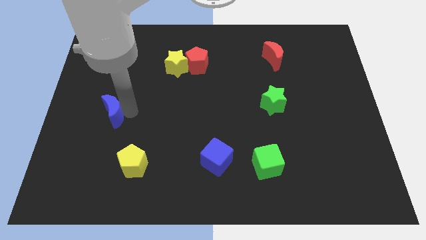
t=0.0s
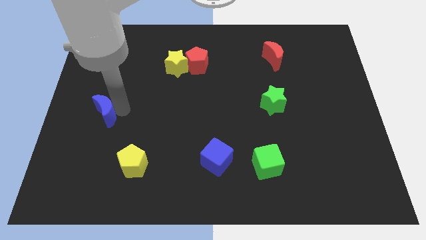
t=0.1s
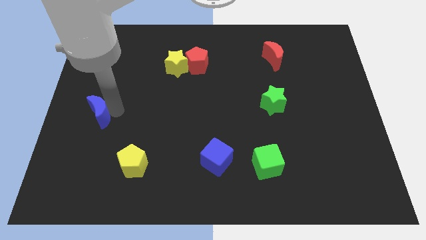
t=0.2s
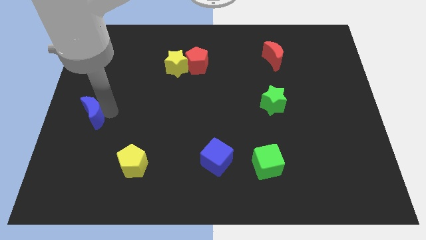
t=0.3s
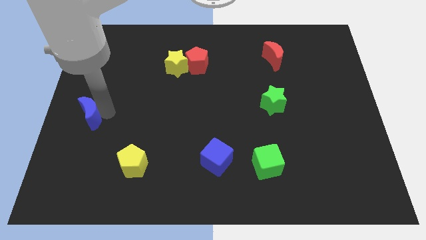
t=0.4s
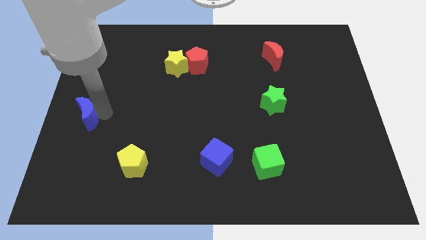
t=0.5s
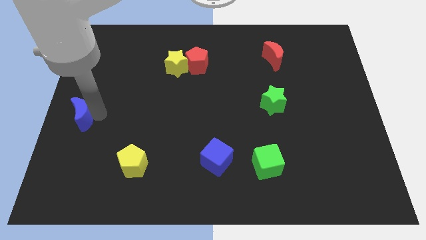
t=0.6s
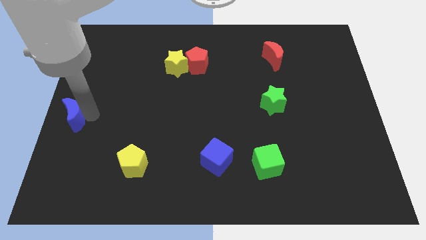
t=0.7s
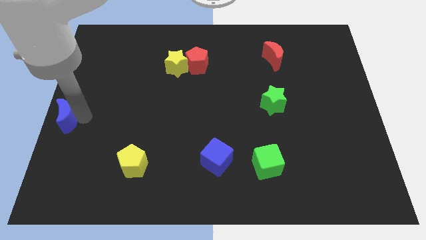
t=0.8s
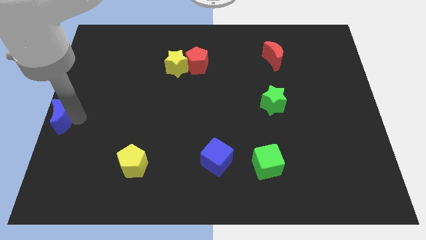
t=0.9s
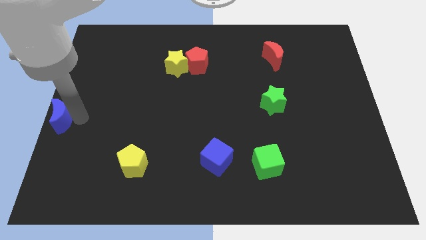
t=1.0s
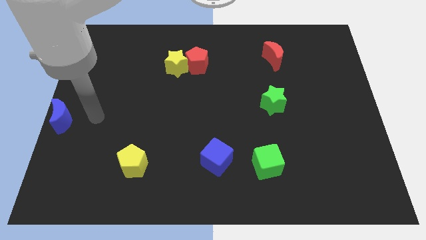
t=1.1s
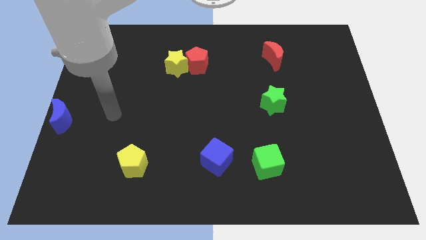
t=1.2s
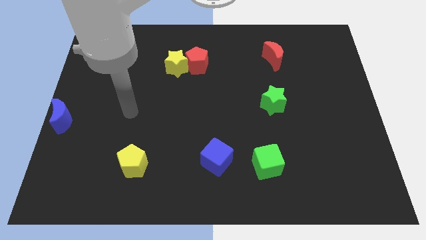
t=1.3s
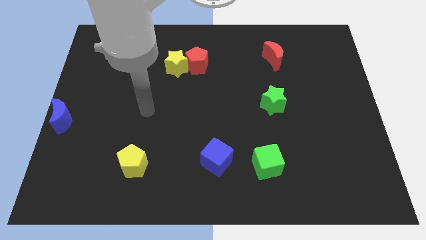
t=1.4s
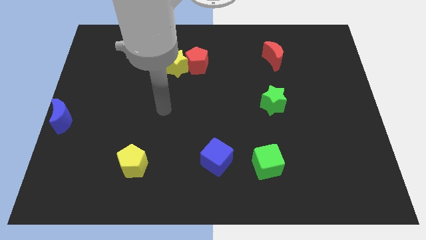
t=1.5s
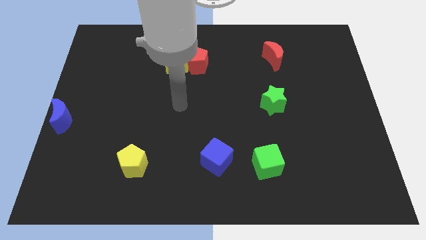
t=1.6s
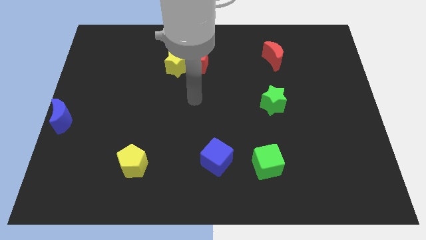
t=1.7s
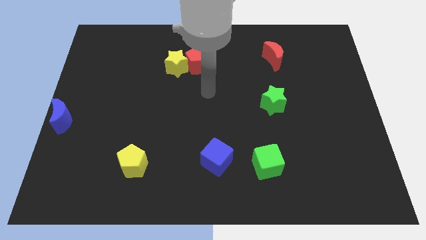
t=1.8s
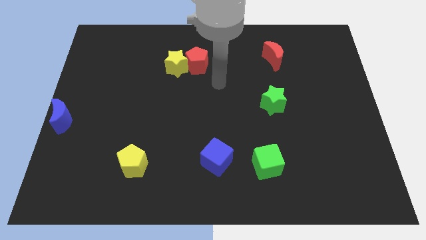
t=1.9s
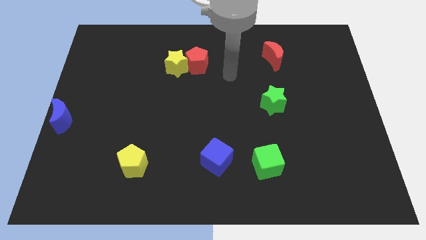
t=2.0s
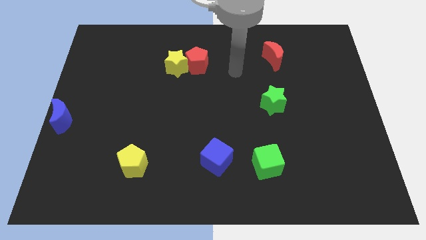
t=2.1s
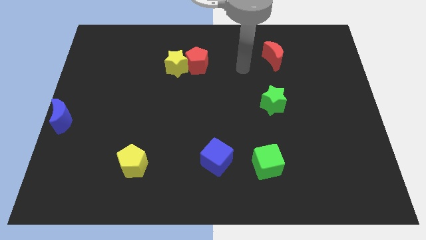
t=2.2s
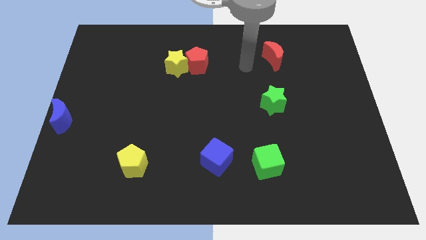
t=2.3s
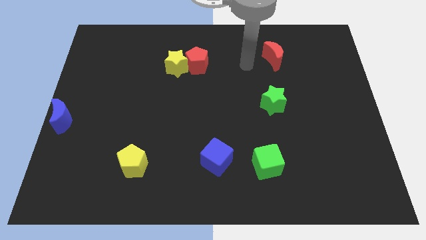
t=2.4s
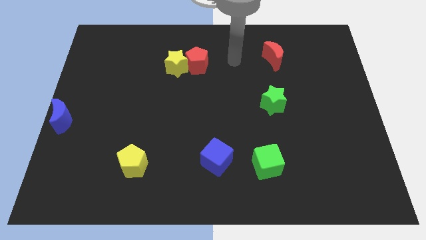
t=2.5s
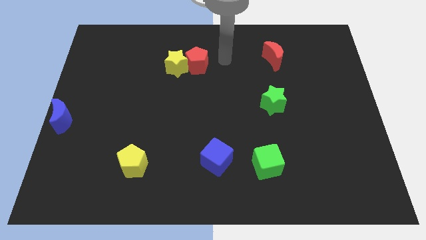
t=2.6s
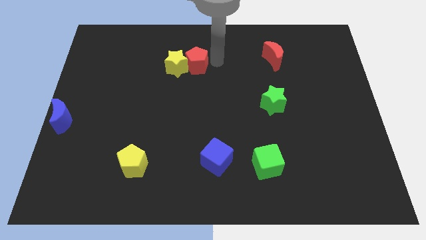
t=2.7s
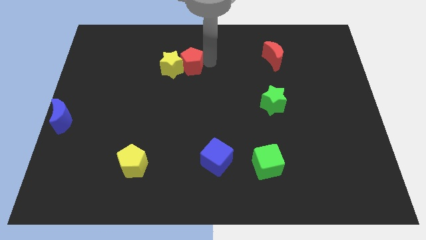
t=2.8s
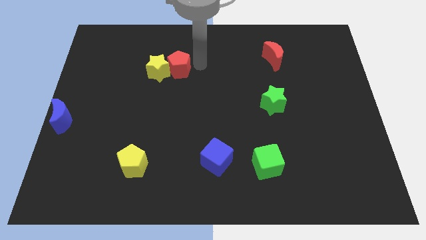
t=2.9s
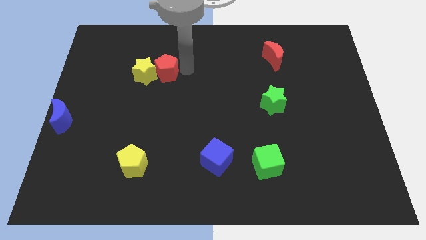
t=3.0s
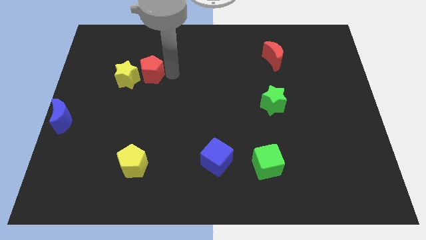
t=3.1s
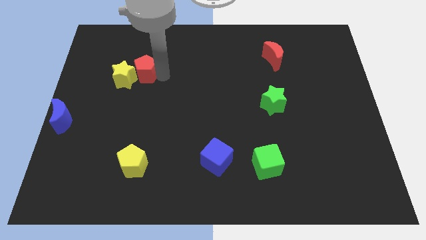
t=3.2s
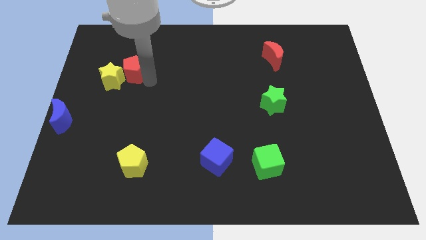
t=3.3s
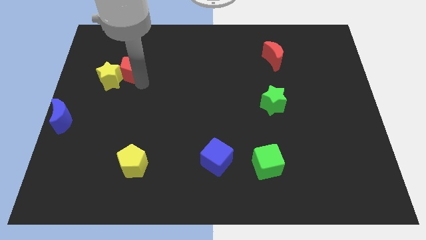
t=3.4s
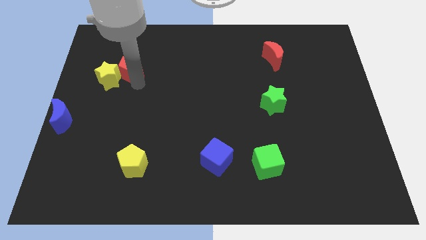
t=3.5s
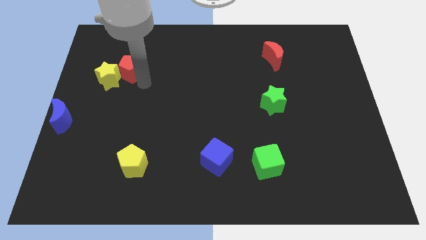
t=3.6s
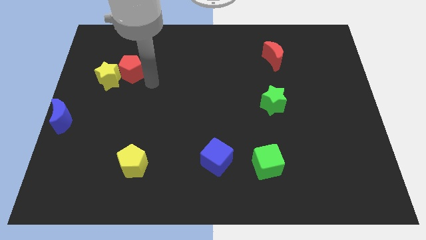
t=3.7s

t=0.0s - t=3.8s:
move the blue crescent to center left of the board

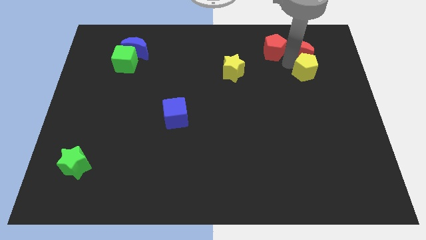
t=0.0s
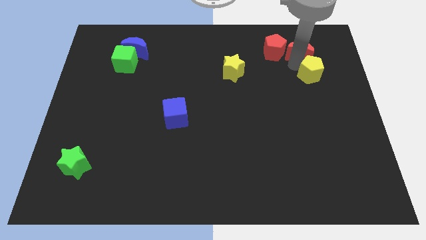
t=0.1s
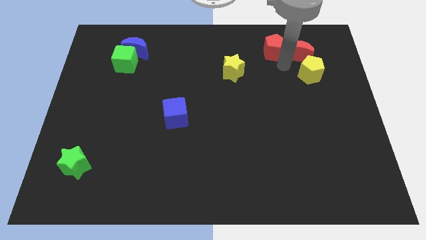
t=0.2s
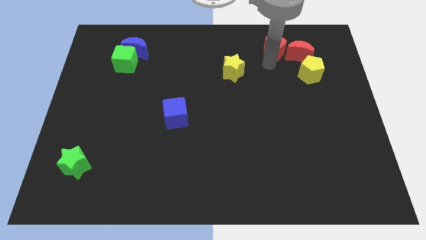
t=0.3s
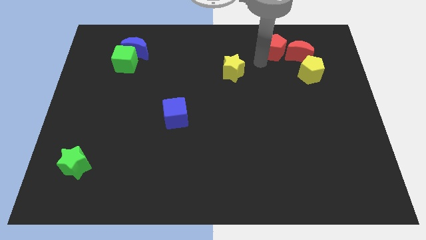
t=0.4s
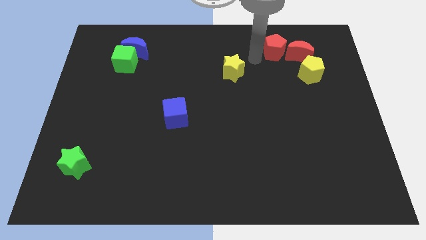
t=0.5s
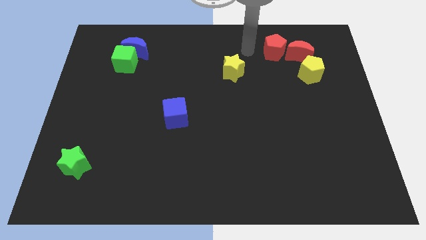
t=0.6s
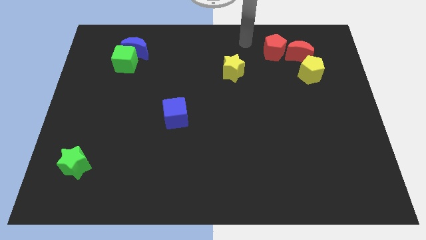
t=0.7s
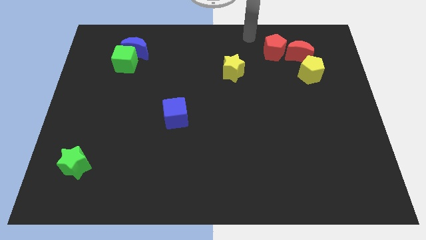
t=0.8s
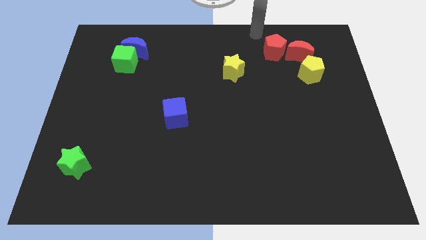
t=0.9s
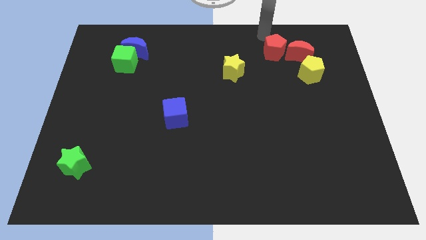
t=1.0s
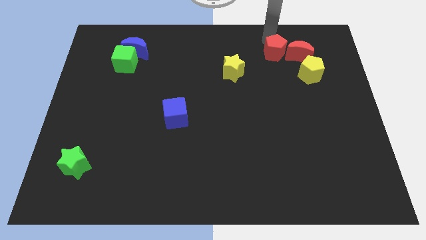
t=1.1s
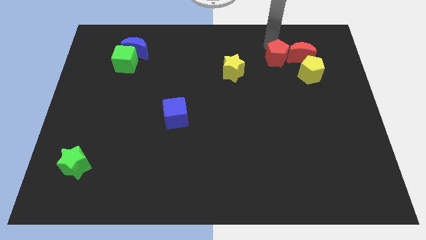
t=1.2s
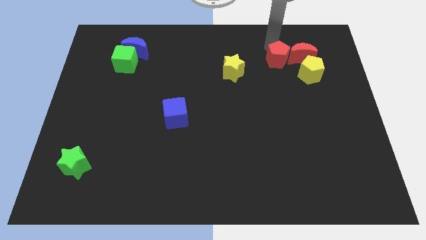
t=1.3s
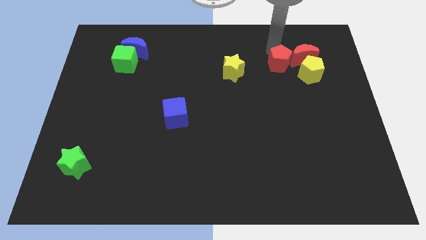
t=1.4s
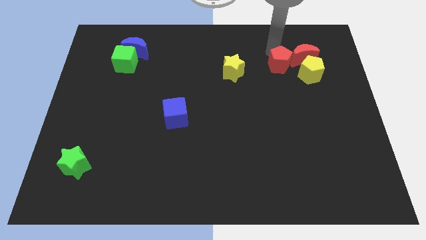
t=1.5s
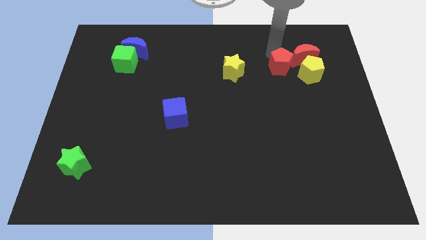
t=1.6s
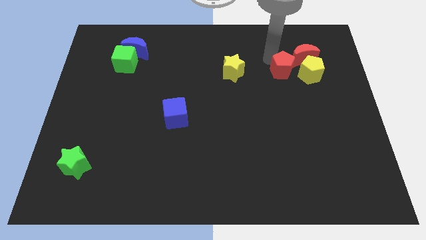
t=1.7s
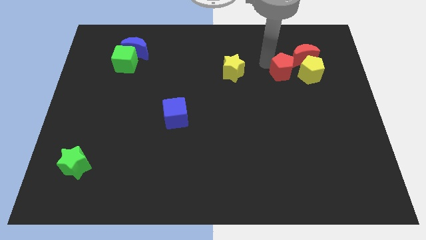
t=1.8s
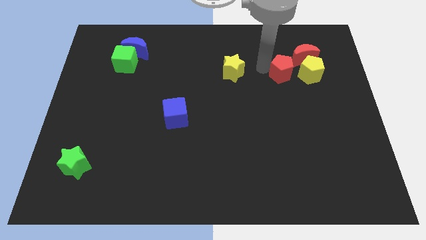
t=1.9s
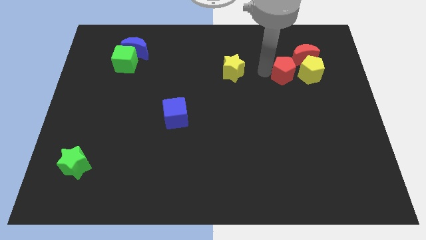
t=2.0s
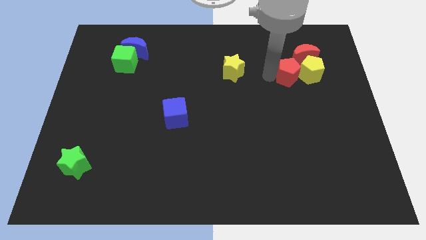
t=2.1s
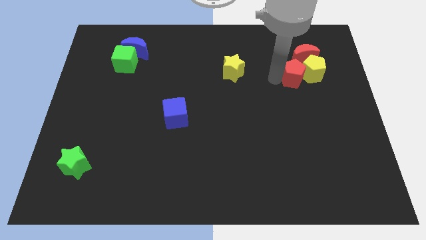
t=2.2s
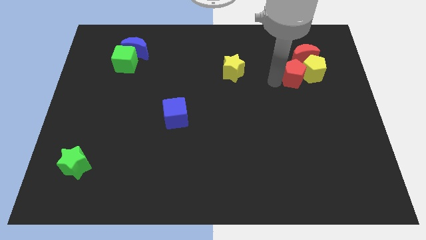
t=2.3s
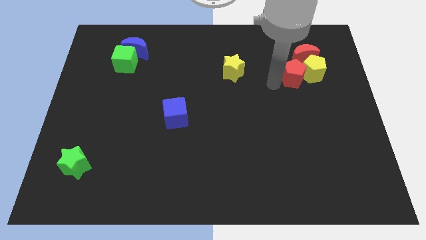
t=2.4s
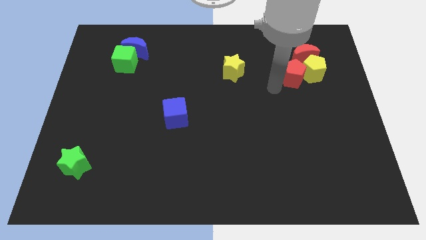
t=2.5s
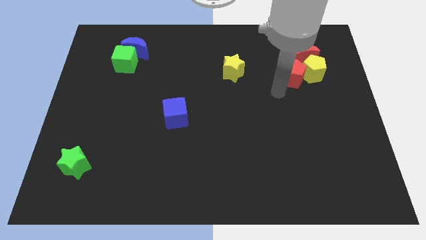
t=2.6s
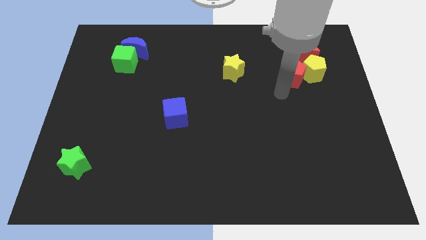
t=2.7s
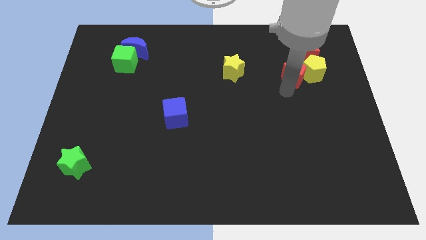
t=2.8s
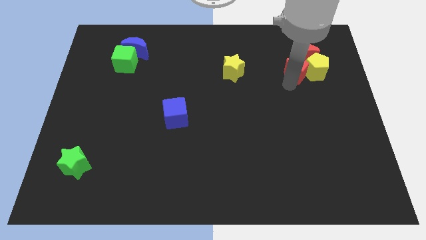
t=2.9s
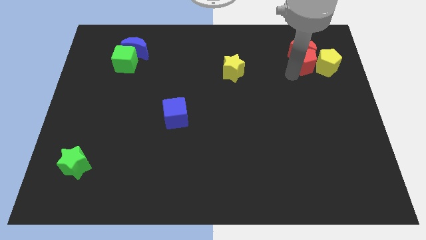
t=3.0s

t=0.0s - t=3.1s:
place the red pentagon left to the yellow pentagon

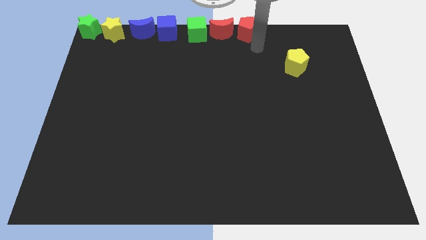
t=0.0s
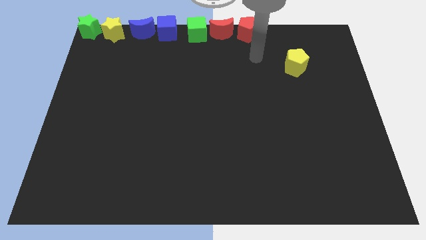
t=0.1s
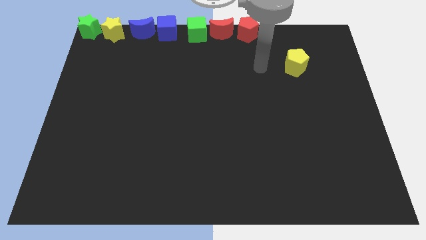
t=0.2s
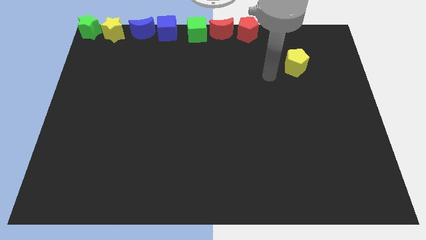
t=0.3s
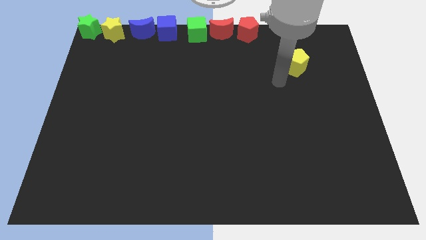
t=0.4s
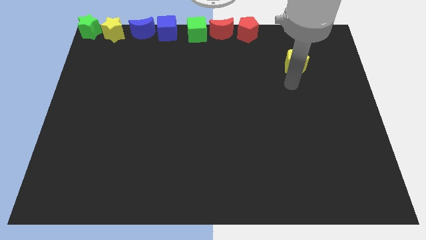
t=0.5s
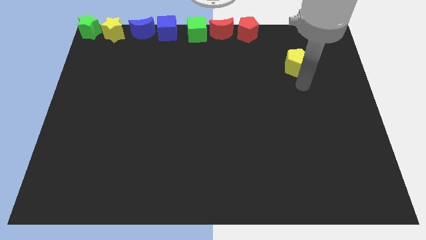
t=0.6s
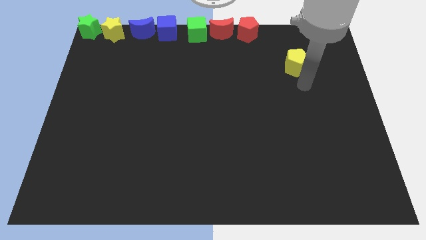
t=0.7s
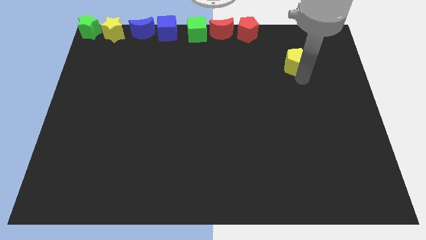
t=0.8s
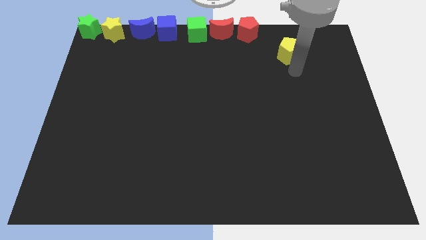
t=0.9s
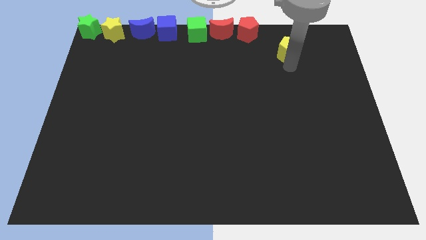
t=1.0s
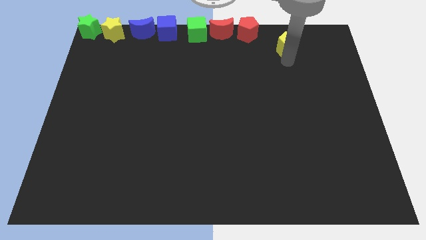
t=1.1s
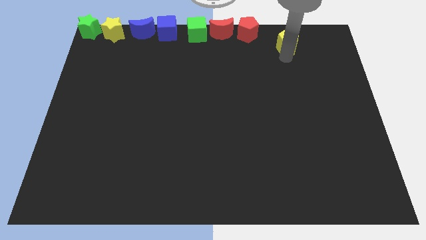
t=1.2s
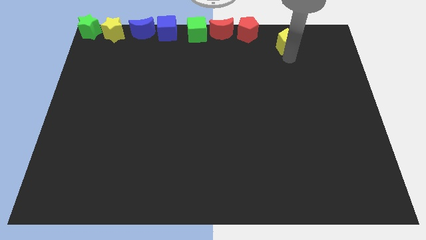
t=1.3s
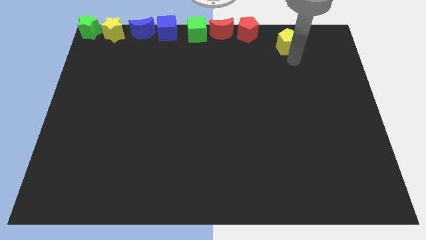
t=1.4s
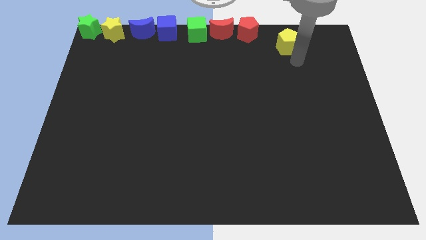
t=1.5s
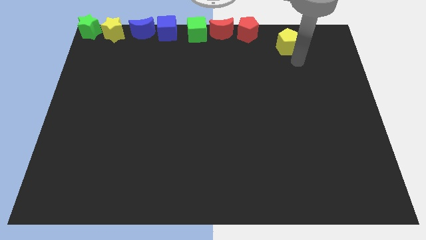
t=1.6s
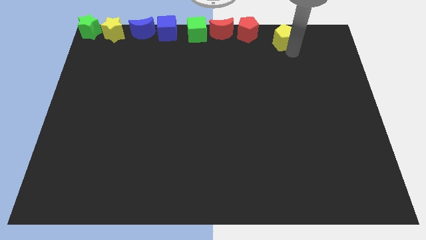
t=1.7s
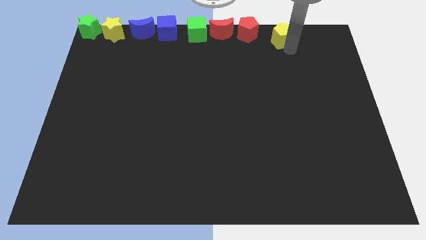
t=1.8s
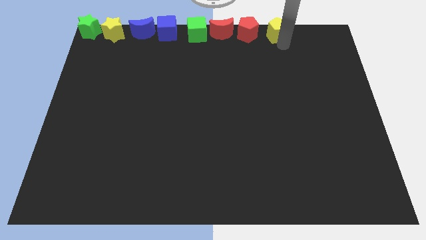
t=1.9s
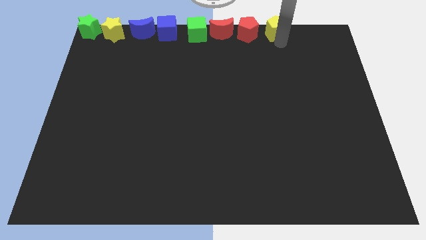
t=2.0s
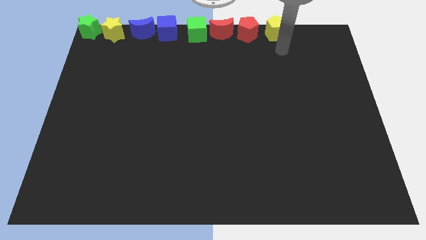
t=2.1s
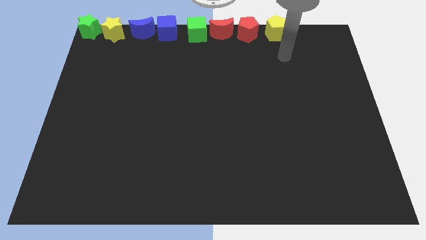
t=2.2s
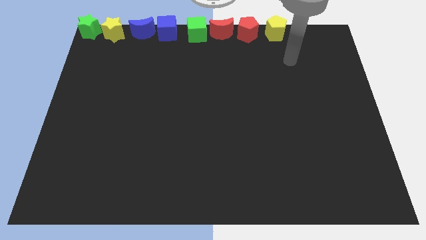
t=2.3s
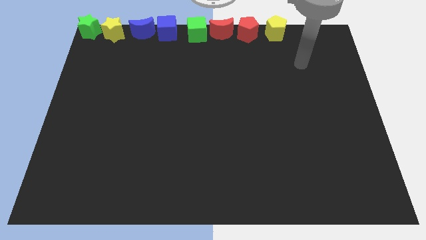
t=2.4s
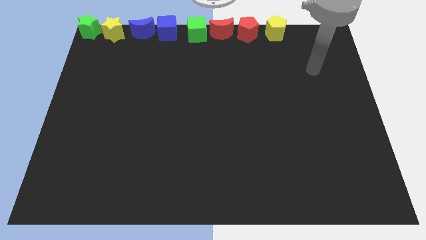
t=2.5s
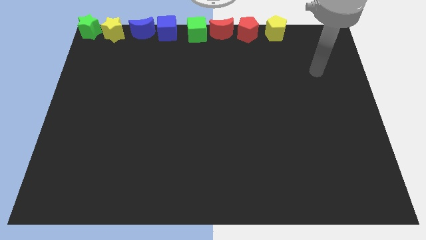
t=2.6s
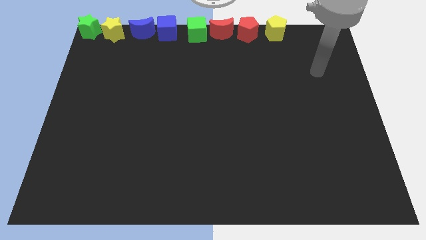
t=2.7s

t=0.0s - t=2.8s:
push the yellow pentagon to the right side of the red pentagon
